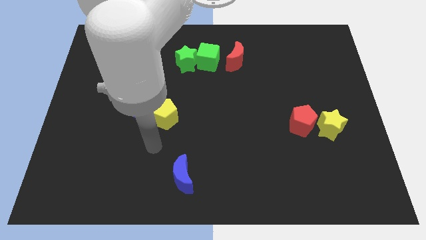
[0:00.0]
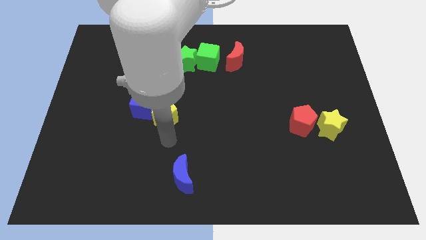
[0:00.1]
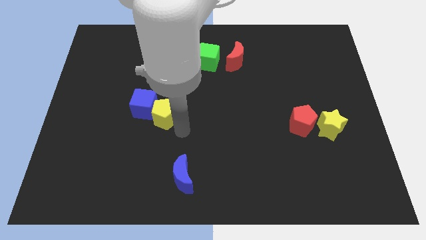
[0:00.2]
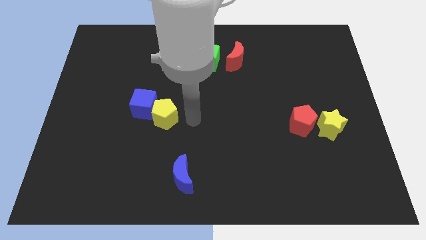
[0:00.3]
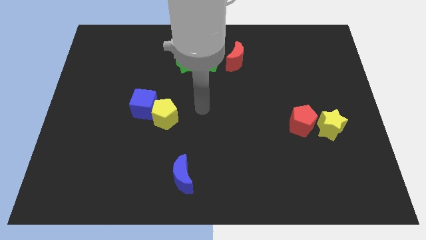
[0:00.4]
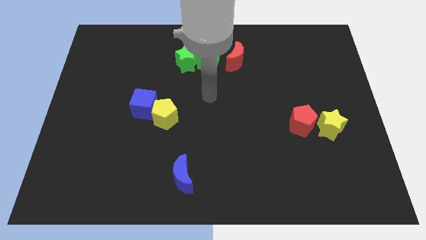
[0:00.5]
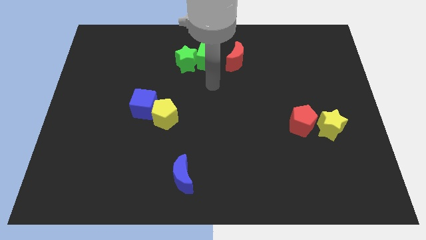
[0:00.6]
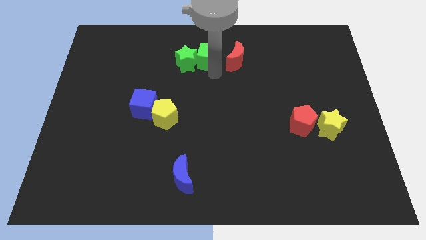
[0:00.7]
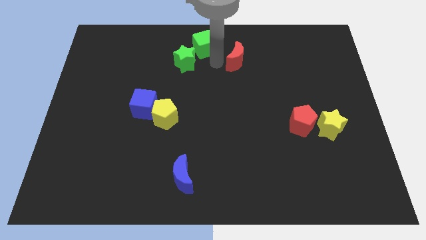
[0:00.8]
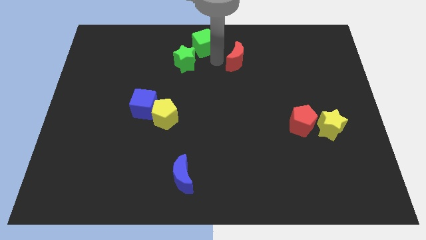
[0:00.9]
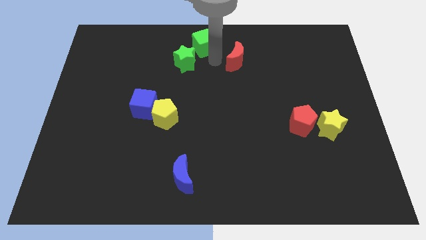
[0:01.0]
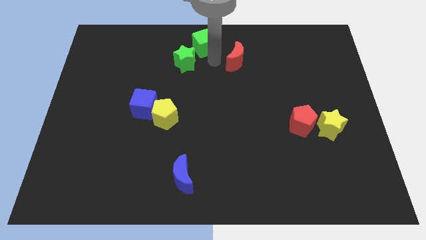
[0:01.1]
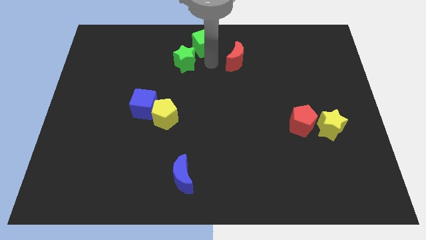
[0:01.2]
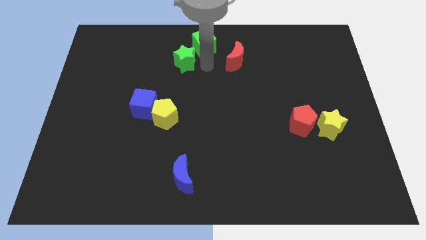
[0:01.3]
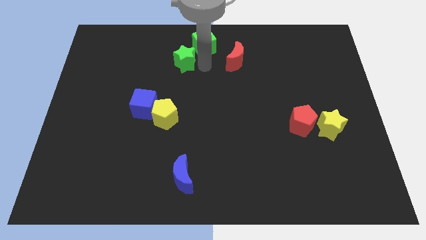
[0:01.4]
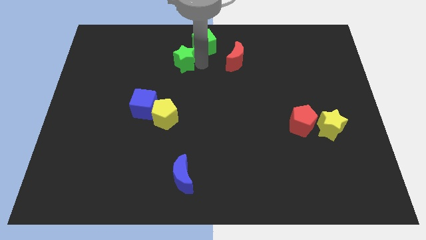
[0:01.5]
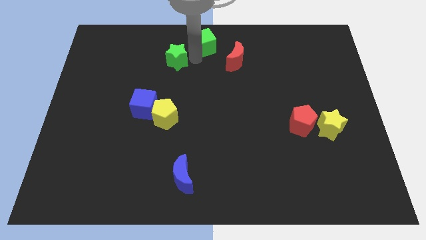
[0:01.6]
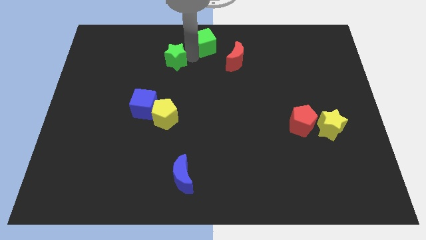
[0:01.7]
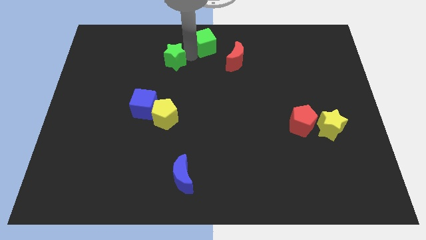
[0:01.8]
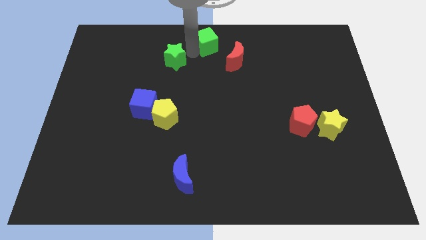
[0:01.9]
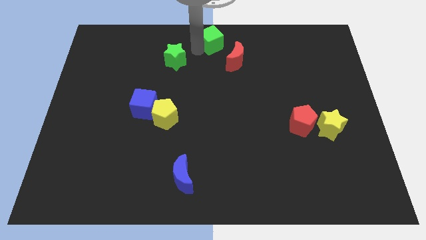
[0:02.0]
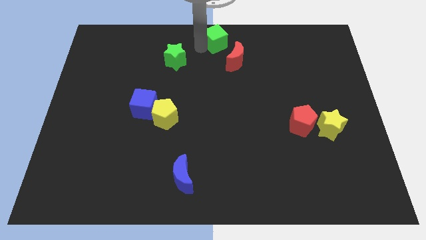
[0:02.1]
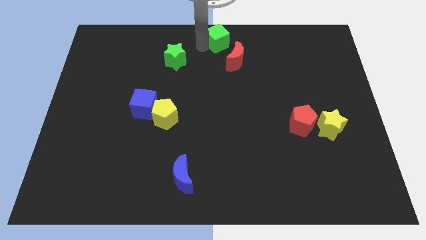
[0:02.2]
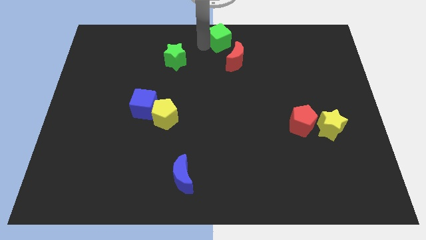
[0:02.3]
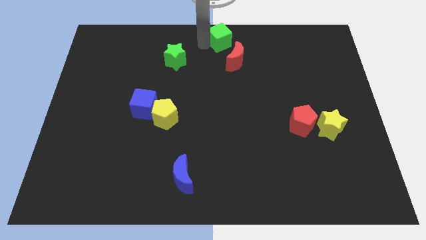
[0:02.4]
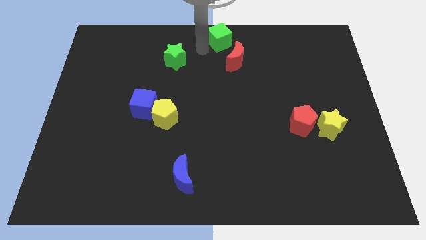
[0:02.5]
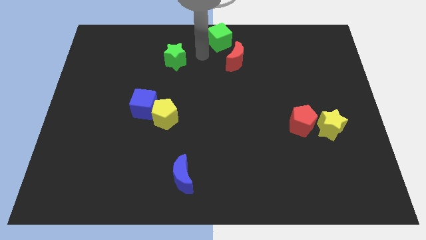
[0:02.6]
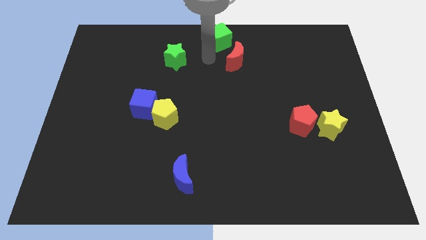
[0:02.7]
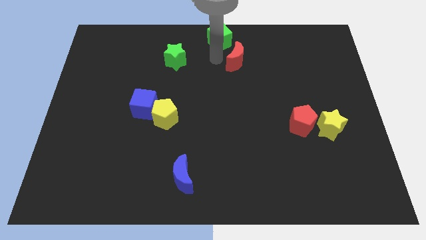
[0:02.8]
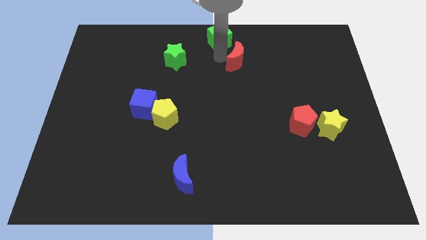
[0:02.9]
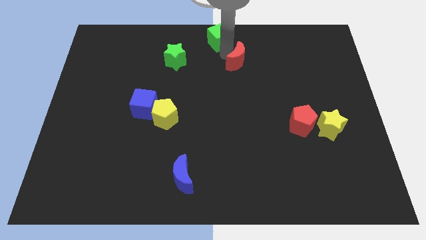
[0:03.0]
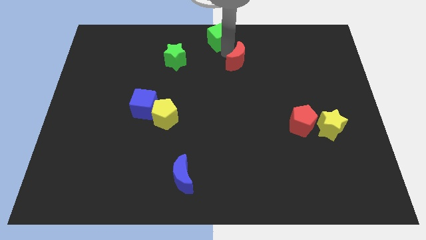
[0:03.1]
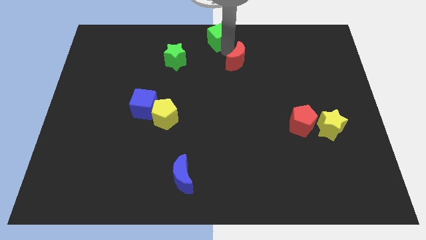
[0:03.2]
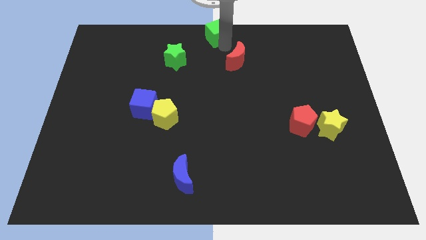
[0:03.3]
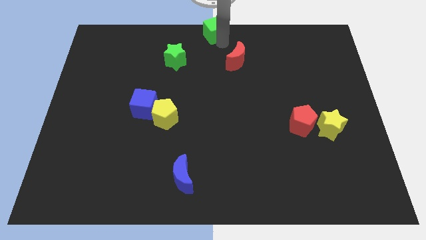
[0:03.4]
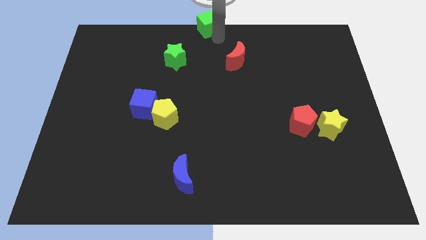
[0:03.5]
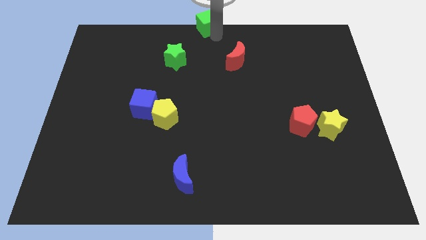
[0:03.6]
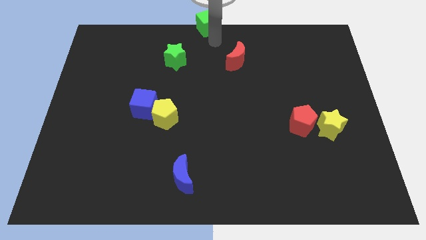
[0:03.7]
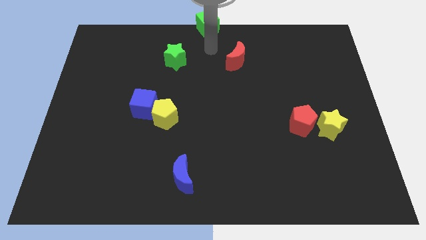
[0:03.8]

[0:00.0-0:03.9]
separate the green star from green cube by placing the green cube at the top center of the board

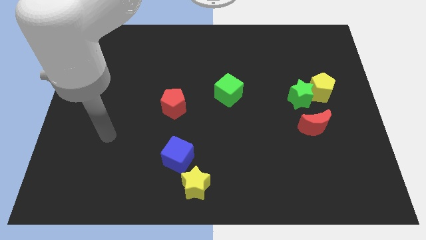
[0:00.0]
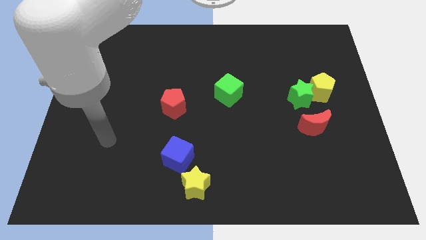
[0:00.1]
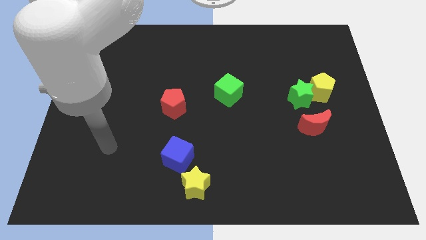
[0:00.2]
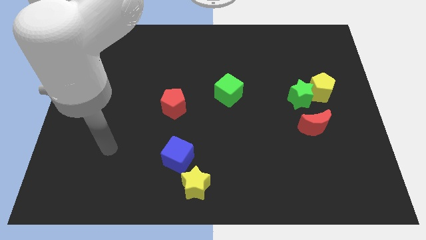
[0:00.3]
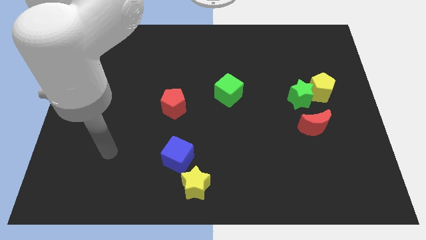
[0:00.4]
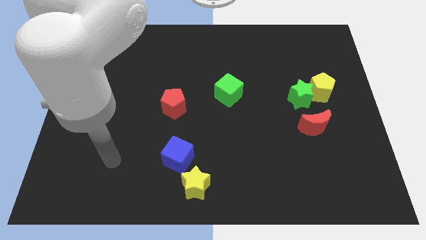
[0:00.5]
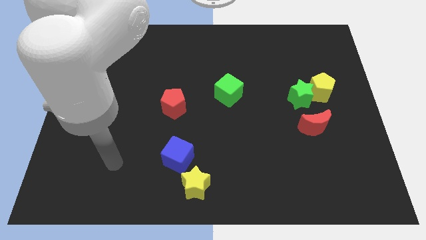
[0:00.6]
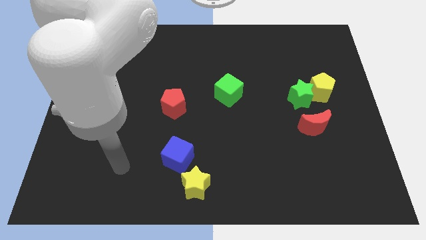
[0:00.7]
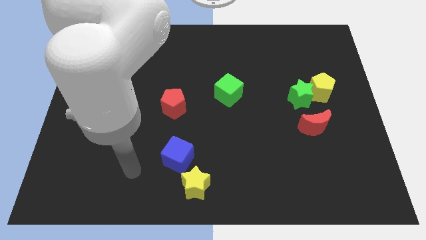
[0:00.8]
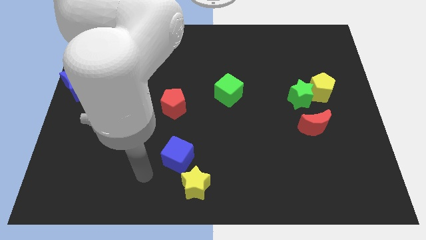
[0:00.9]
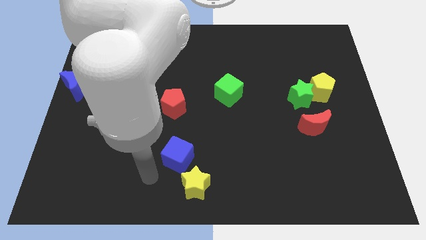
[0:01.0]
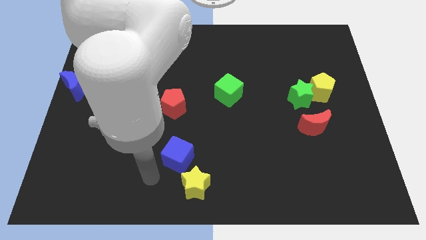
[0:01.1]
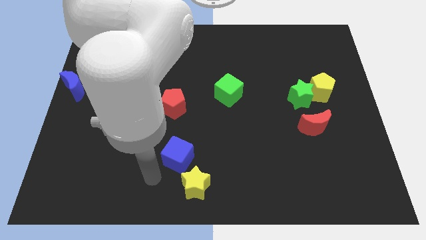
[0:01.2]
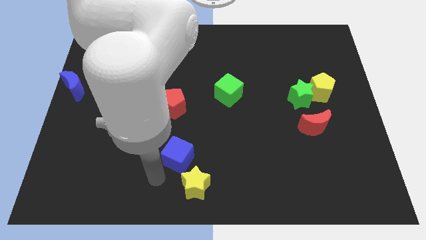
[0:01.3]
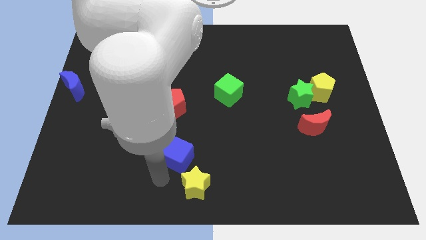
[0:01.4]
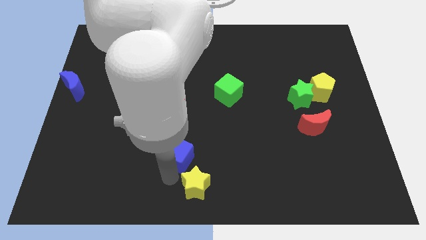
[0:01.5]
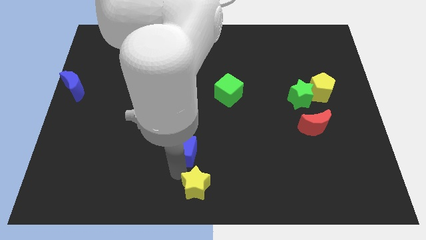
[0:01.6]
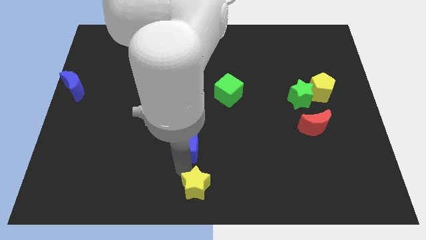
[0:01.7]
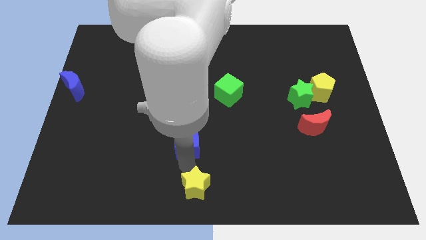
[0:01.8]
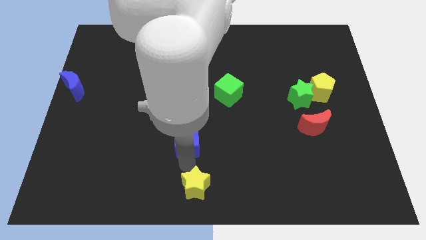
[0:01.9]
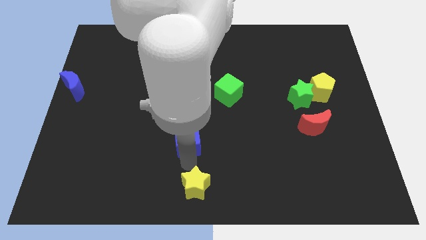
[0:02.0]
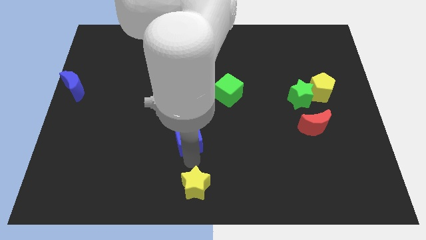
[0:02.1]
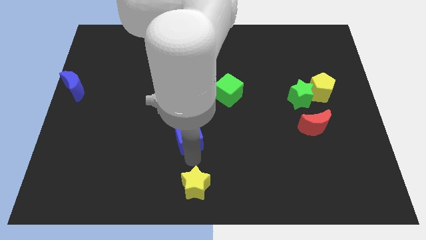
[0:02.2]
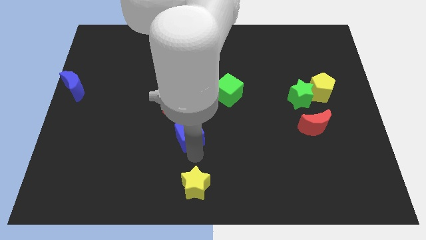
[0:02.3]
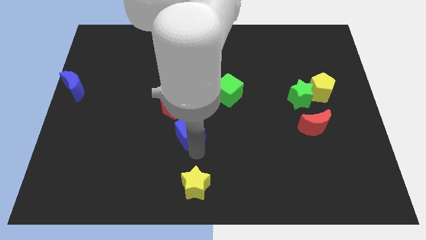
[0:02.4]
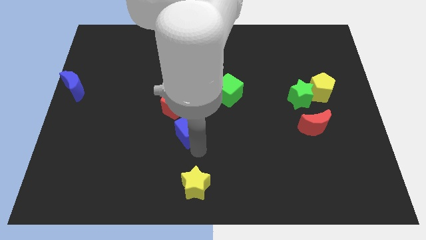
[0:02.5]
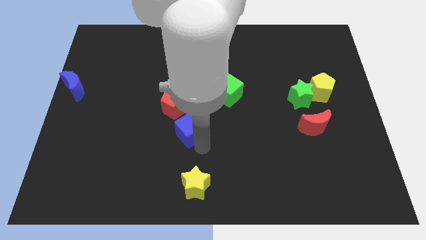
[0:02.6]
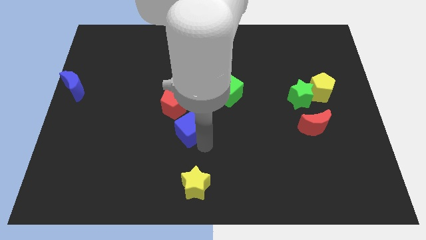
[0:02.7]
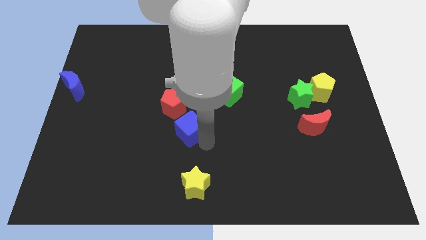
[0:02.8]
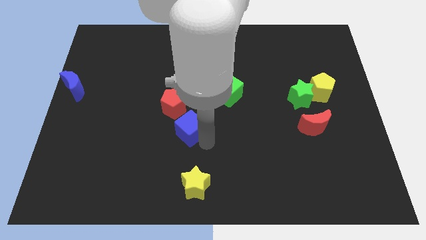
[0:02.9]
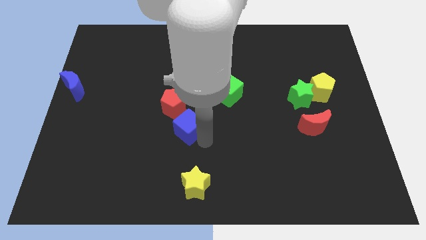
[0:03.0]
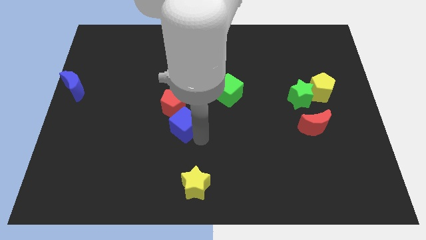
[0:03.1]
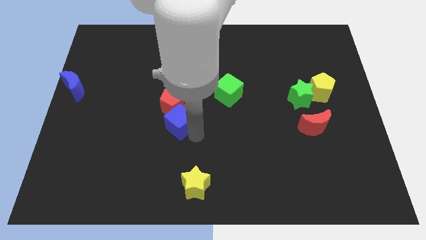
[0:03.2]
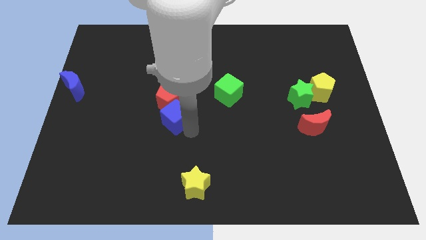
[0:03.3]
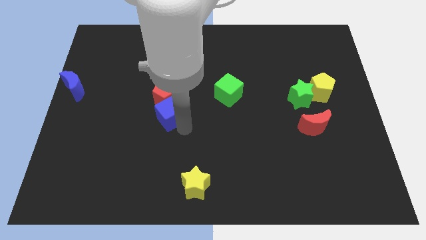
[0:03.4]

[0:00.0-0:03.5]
move the blue cube into the red pentagon

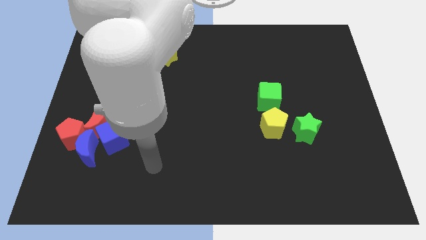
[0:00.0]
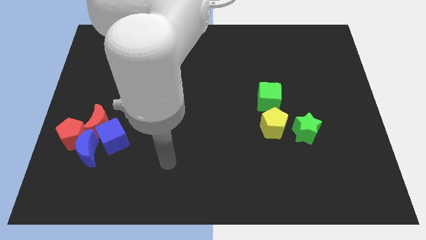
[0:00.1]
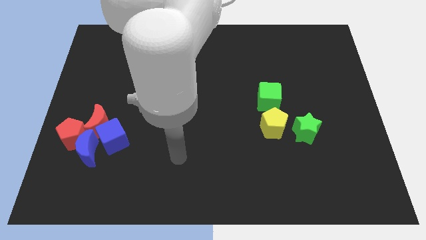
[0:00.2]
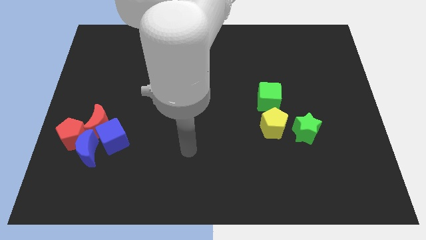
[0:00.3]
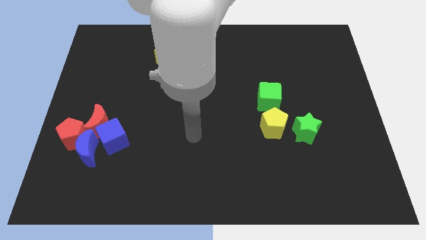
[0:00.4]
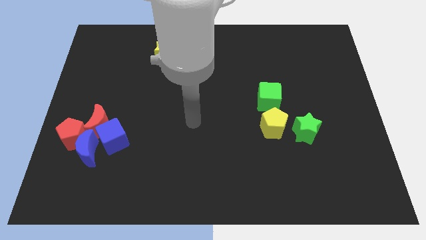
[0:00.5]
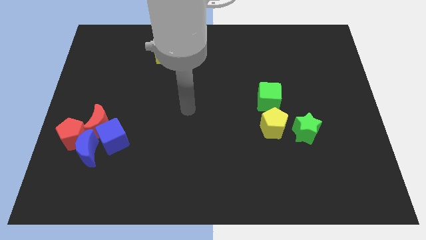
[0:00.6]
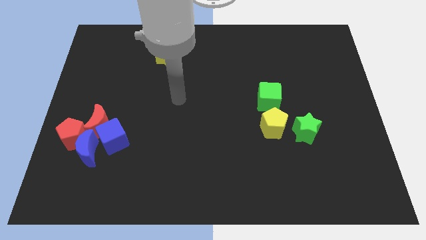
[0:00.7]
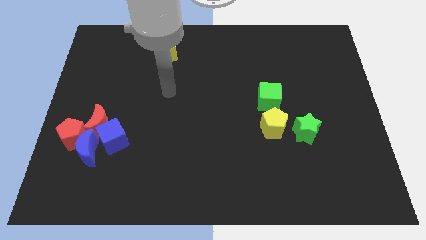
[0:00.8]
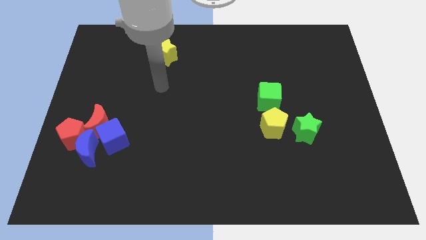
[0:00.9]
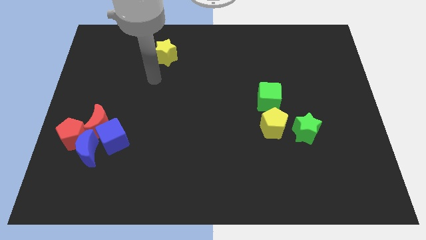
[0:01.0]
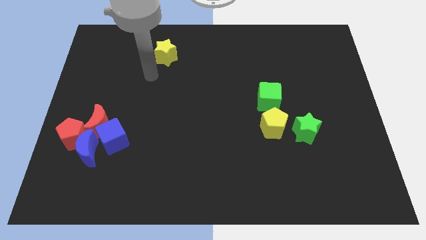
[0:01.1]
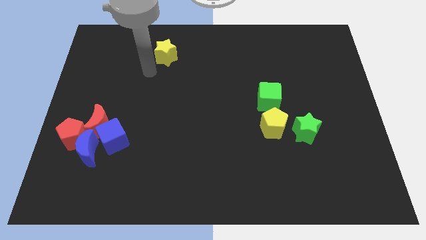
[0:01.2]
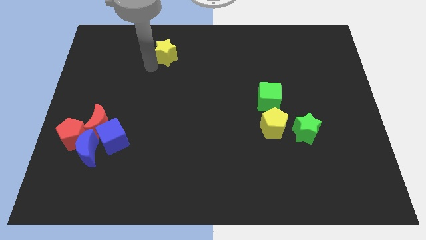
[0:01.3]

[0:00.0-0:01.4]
push the yellow star slightly to the top

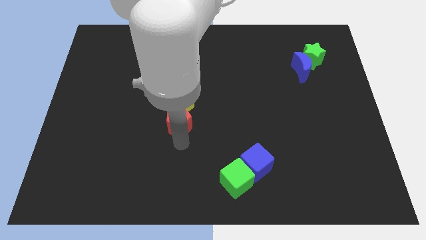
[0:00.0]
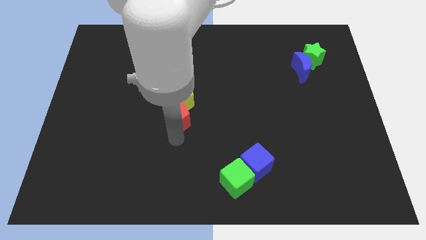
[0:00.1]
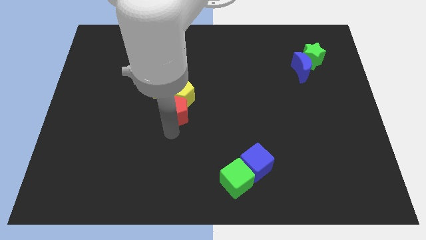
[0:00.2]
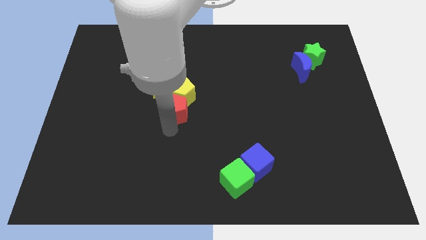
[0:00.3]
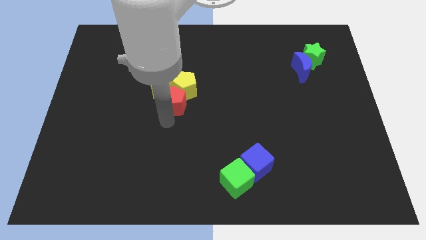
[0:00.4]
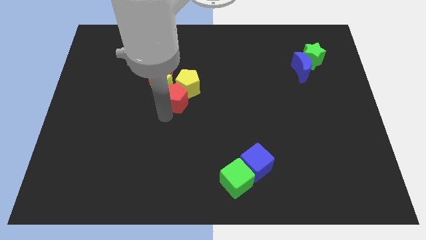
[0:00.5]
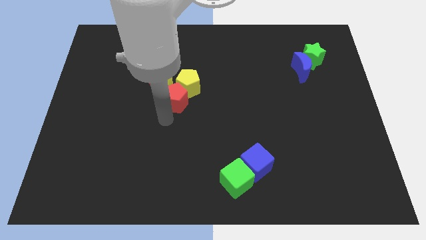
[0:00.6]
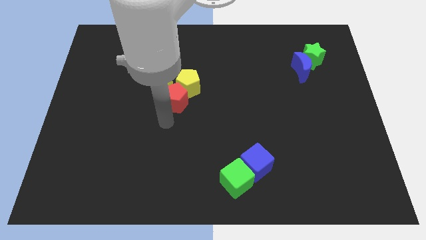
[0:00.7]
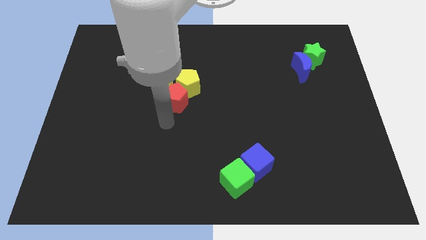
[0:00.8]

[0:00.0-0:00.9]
move the yellow pentagon with the help of the red pentagon
